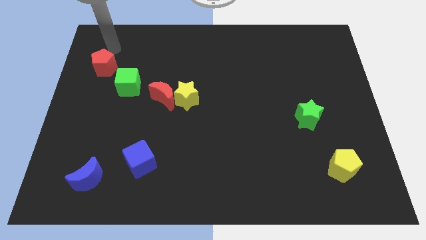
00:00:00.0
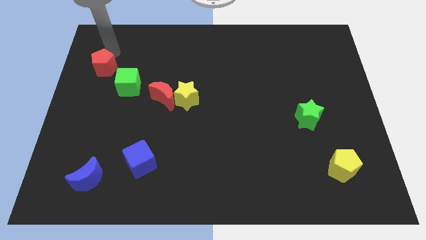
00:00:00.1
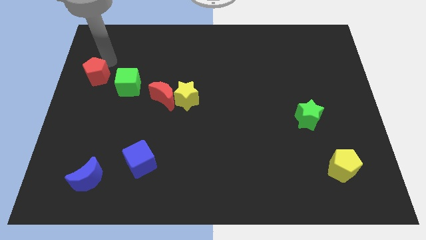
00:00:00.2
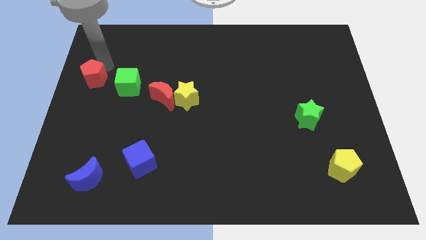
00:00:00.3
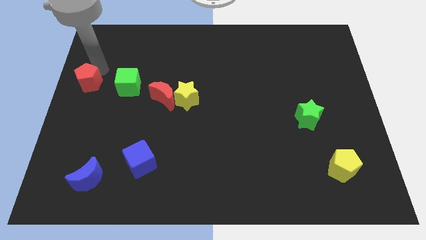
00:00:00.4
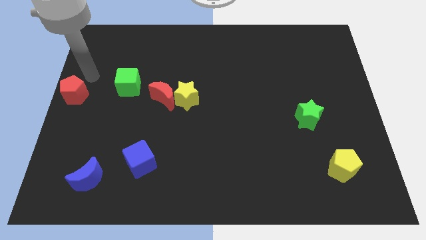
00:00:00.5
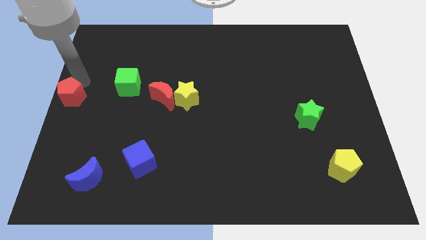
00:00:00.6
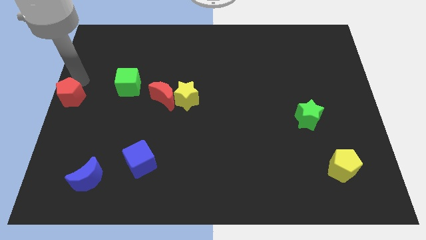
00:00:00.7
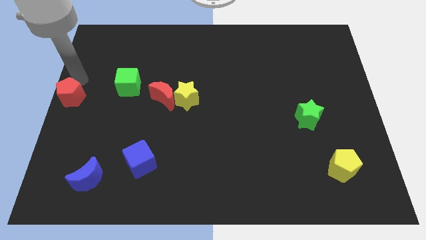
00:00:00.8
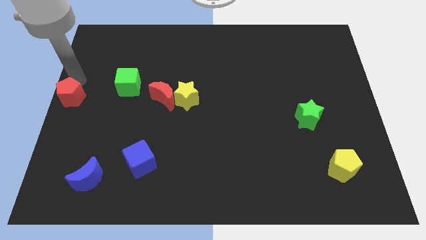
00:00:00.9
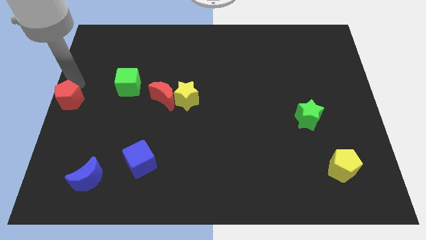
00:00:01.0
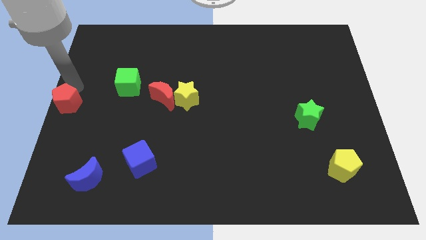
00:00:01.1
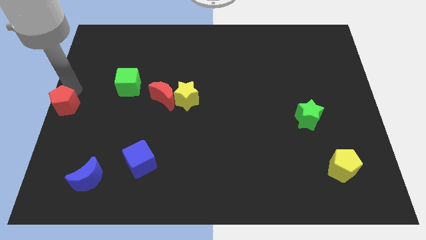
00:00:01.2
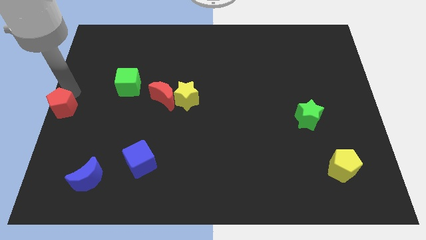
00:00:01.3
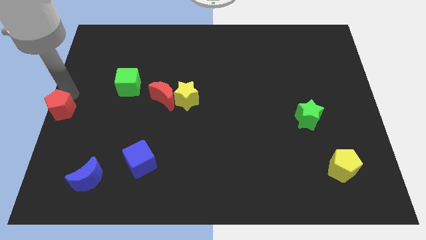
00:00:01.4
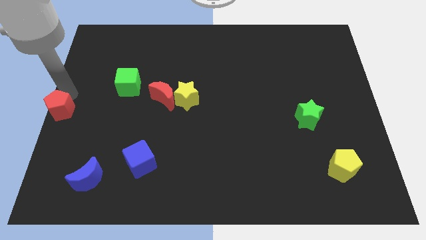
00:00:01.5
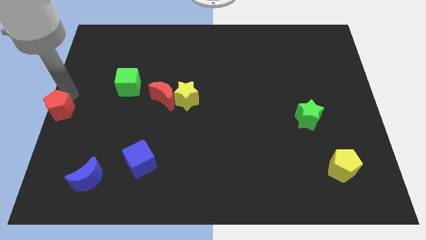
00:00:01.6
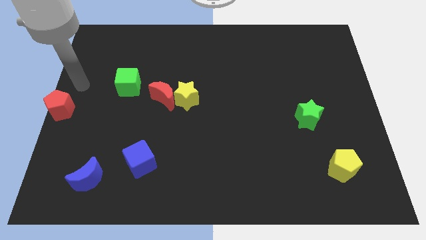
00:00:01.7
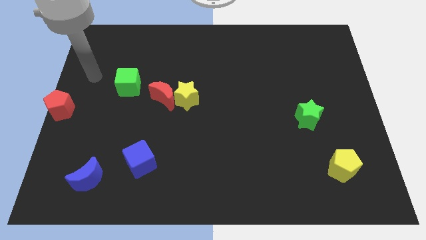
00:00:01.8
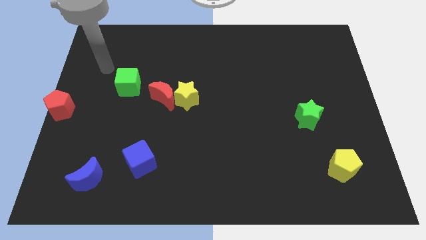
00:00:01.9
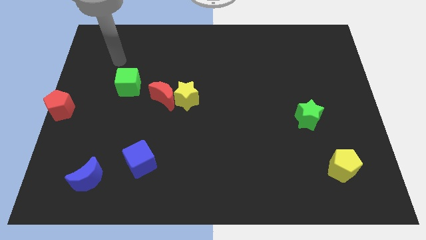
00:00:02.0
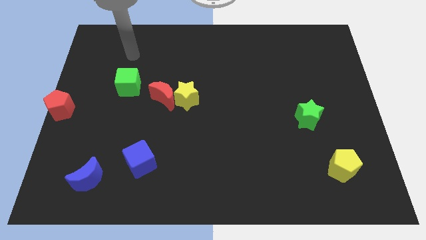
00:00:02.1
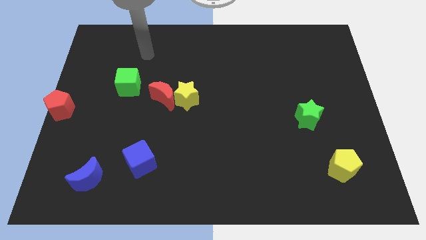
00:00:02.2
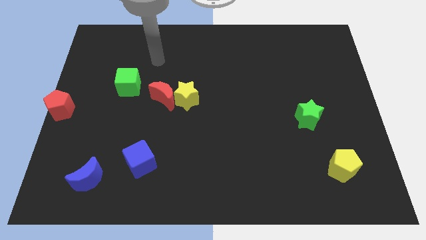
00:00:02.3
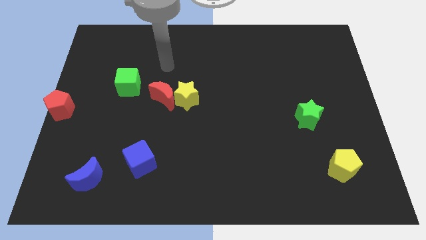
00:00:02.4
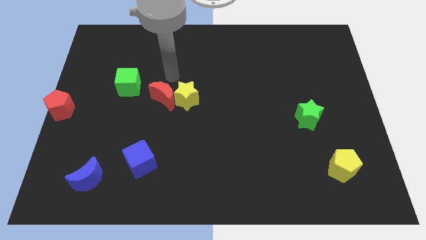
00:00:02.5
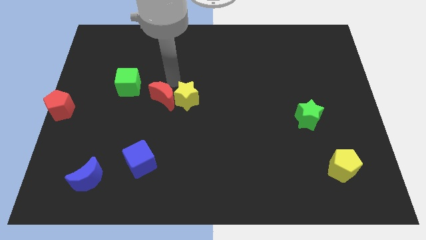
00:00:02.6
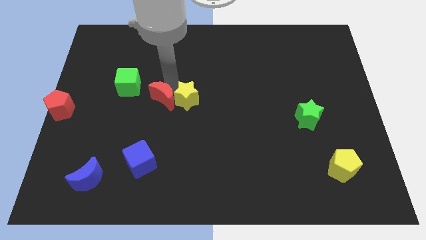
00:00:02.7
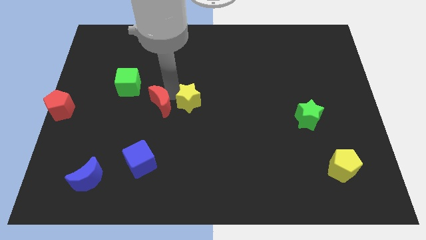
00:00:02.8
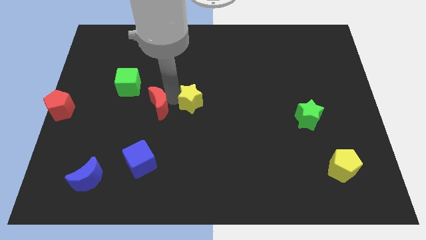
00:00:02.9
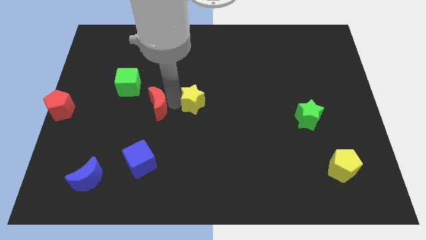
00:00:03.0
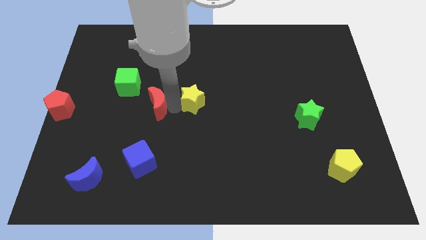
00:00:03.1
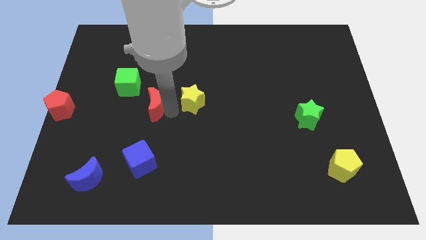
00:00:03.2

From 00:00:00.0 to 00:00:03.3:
separate the red moon and yellow star

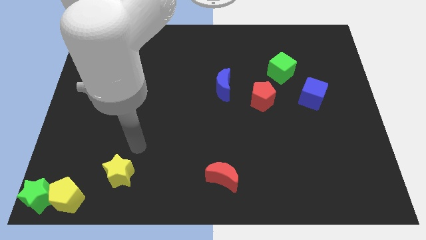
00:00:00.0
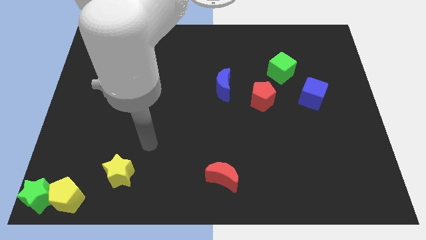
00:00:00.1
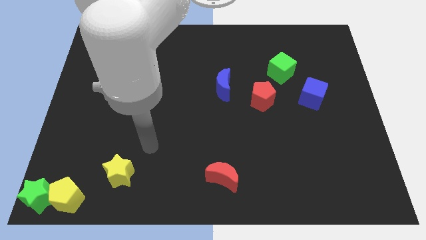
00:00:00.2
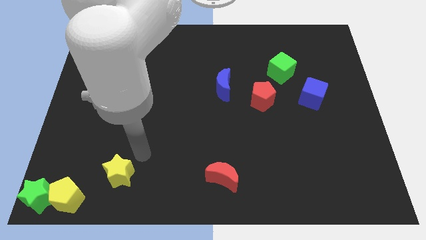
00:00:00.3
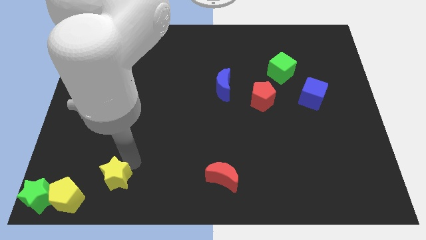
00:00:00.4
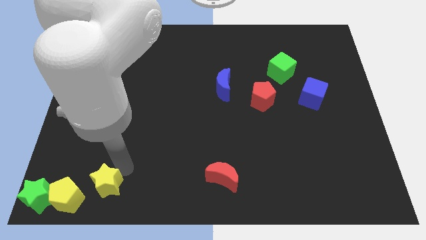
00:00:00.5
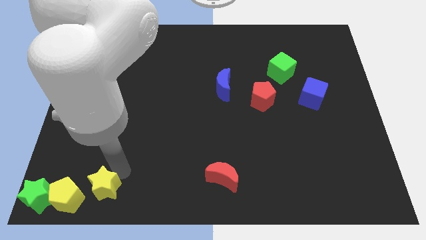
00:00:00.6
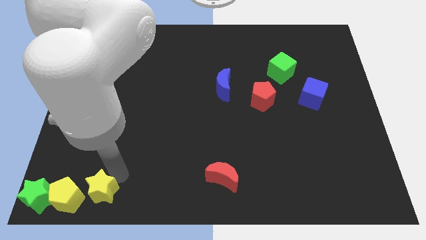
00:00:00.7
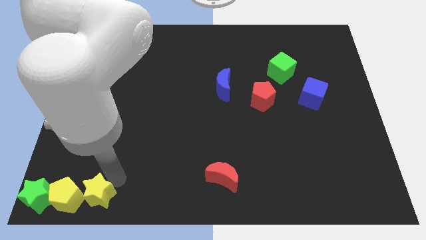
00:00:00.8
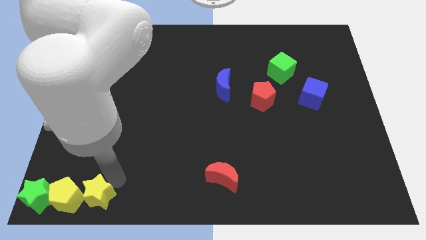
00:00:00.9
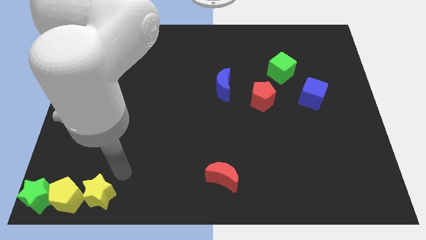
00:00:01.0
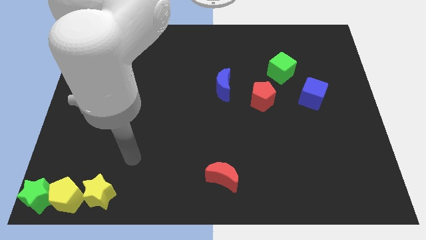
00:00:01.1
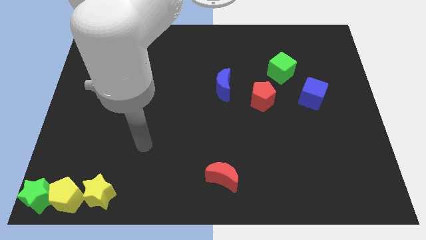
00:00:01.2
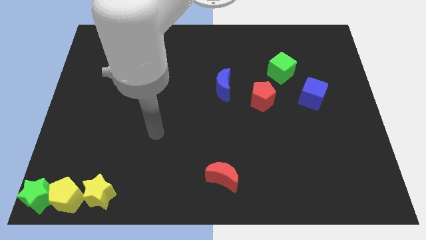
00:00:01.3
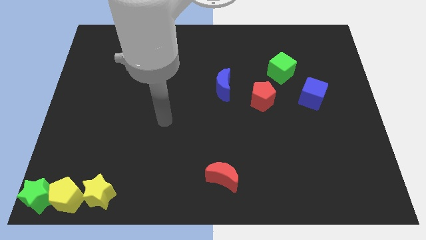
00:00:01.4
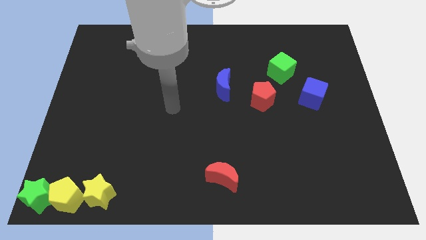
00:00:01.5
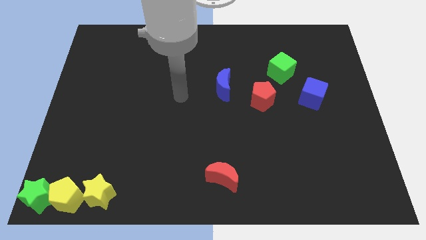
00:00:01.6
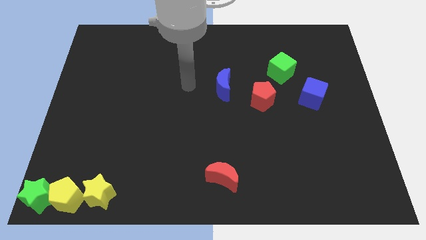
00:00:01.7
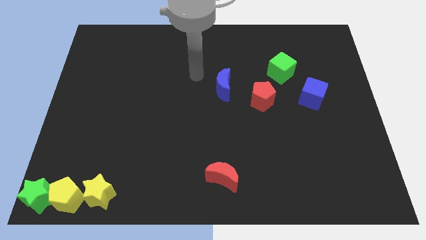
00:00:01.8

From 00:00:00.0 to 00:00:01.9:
place the yellow star horizontal to the right of the yellow pentagon

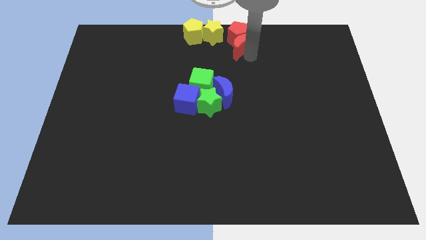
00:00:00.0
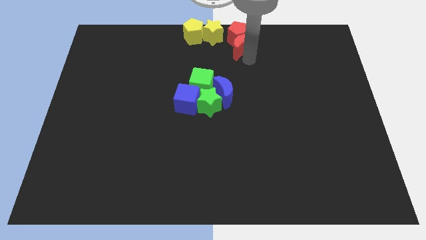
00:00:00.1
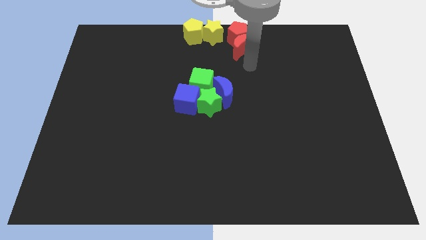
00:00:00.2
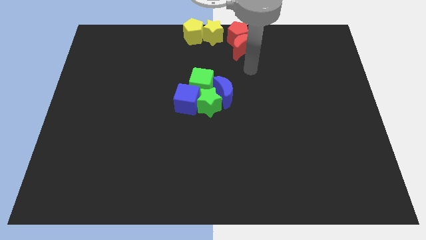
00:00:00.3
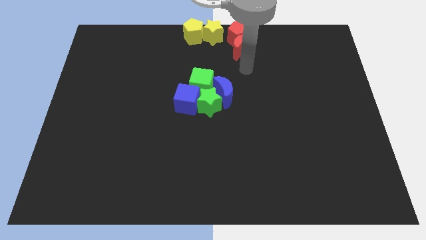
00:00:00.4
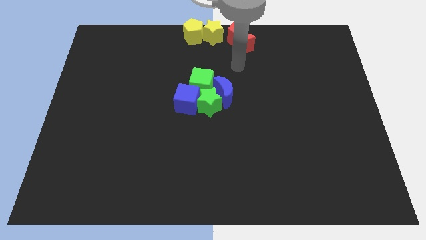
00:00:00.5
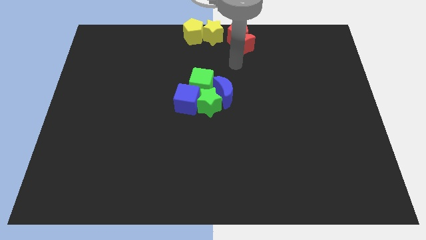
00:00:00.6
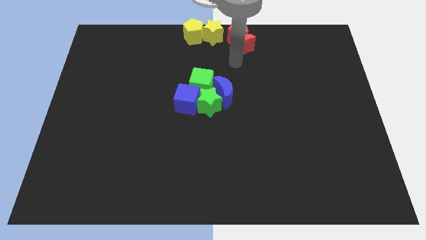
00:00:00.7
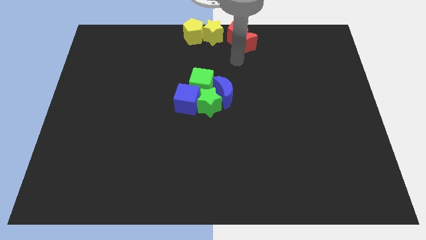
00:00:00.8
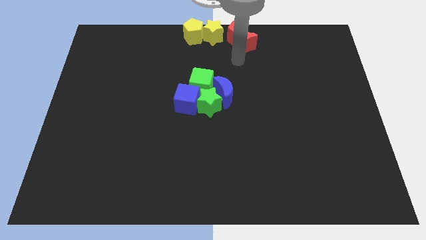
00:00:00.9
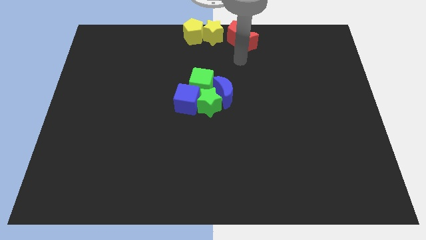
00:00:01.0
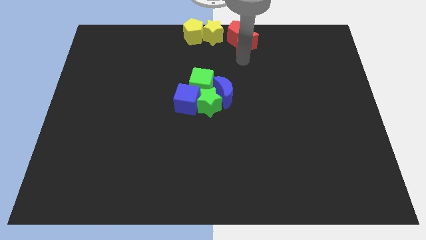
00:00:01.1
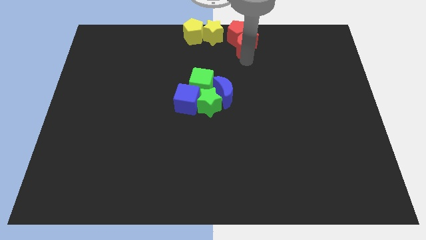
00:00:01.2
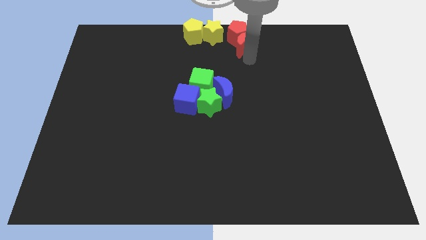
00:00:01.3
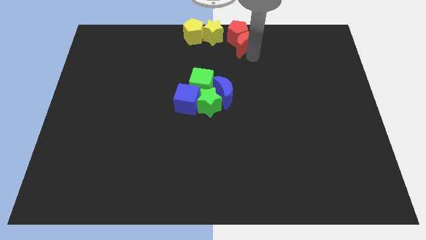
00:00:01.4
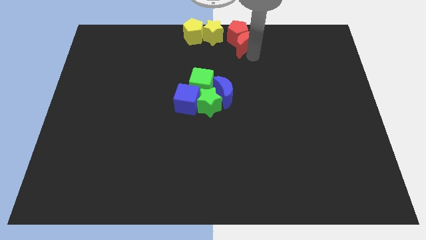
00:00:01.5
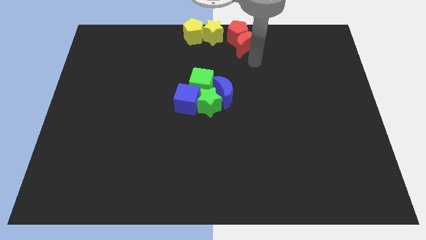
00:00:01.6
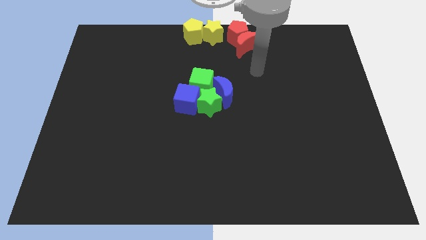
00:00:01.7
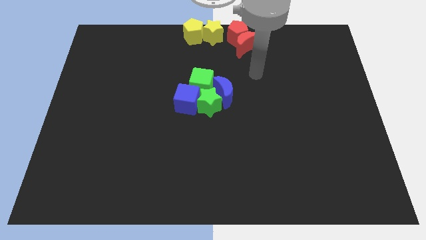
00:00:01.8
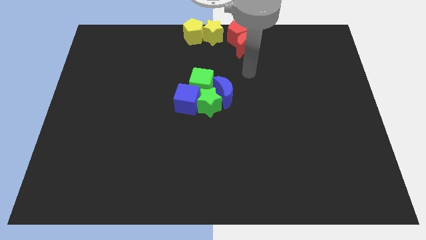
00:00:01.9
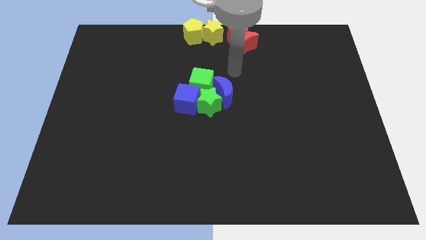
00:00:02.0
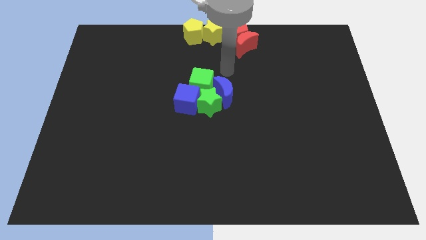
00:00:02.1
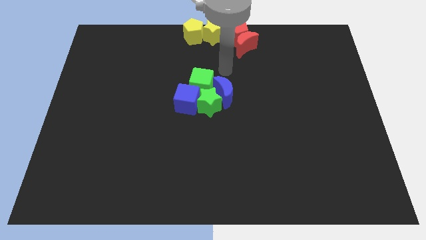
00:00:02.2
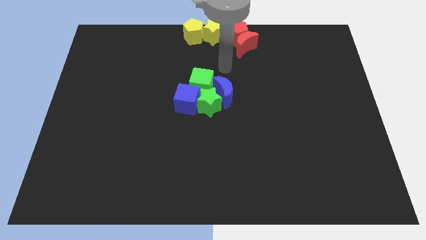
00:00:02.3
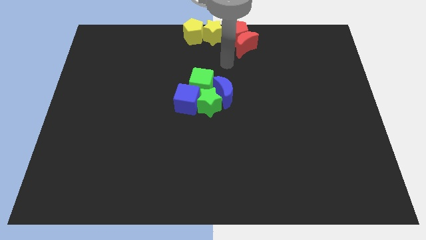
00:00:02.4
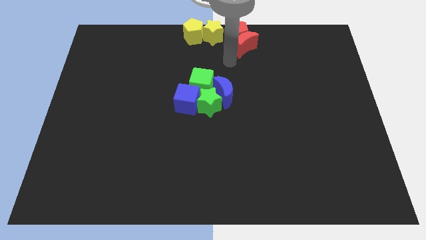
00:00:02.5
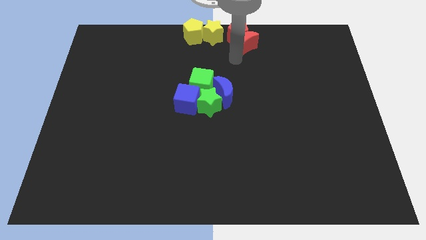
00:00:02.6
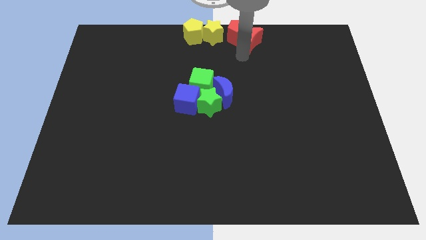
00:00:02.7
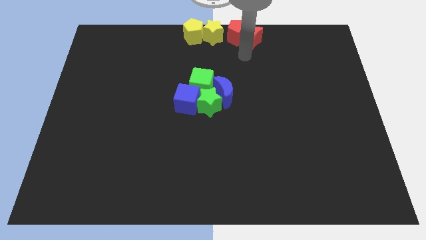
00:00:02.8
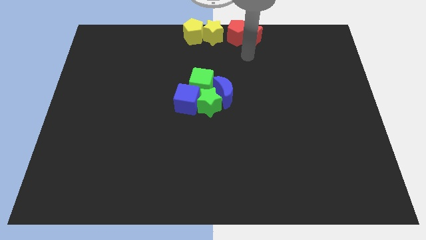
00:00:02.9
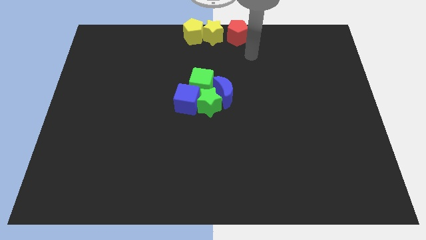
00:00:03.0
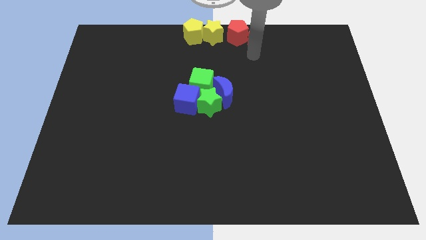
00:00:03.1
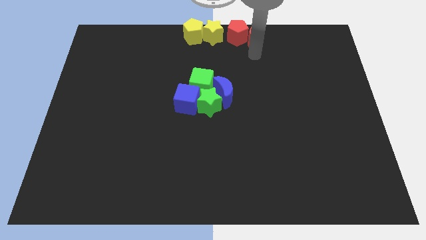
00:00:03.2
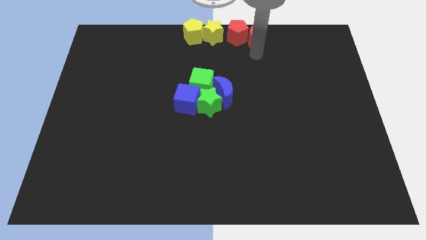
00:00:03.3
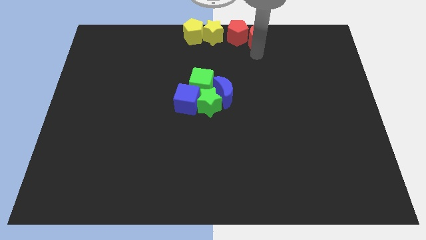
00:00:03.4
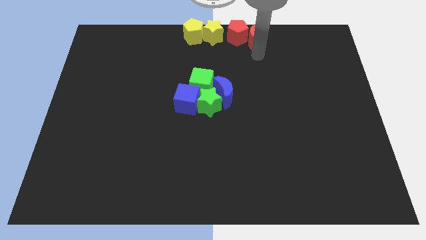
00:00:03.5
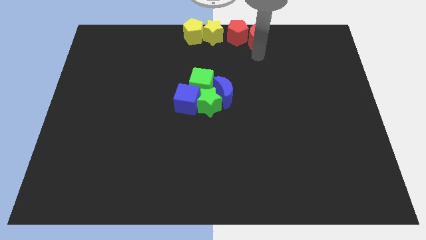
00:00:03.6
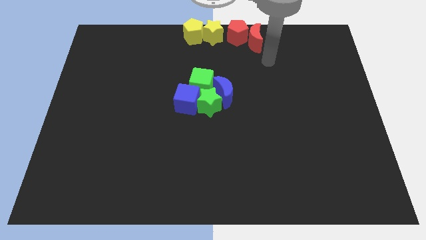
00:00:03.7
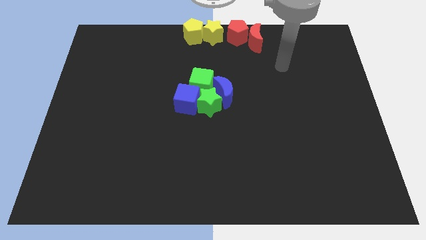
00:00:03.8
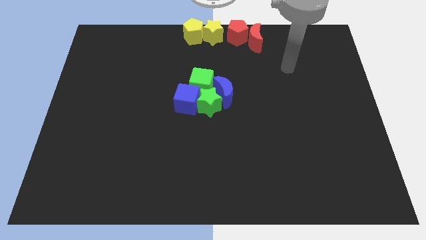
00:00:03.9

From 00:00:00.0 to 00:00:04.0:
place red moon to the right of red pentagon
